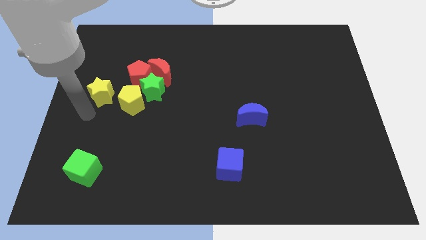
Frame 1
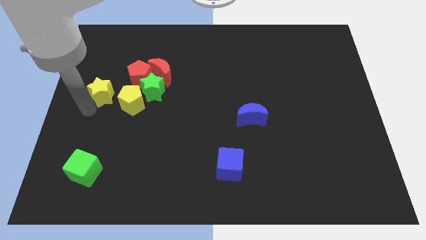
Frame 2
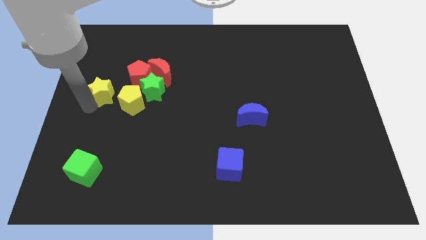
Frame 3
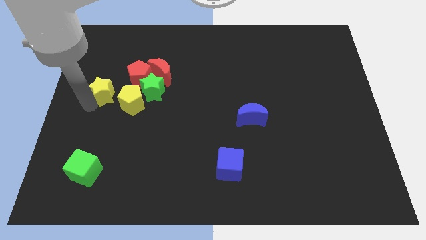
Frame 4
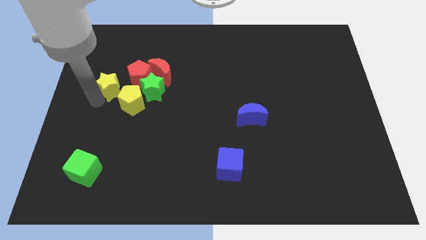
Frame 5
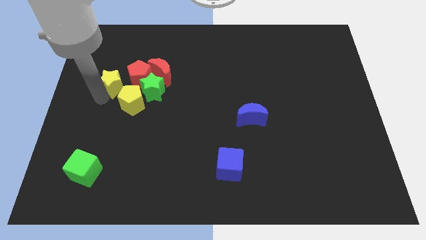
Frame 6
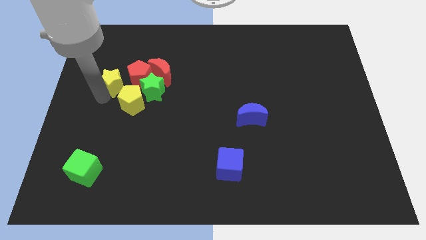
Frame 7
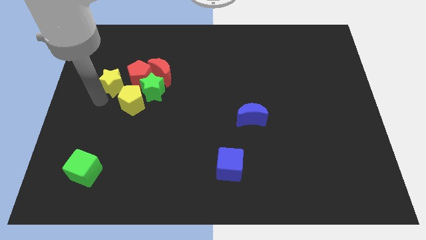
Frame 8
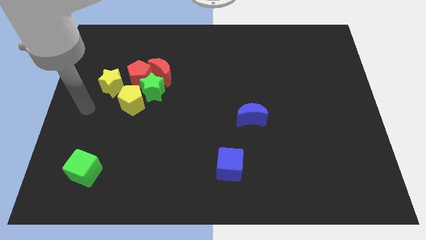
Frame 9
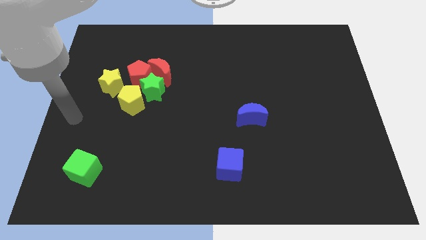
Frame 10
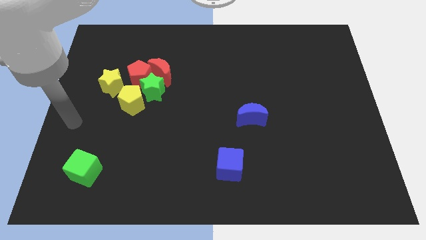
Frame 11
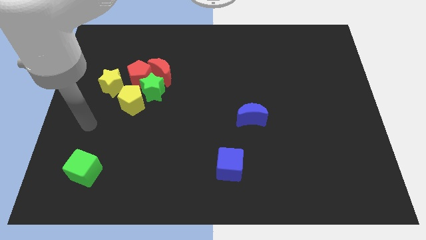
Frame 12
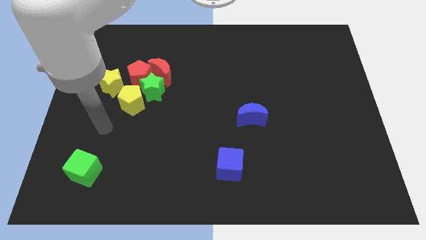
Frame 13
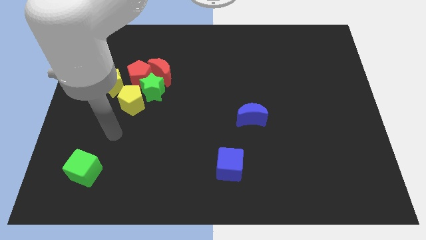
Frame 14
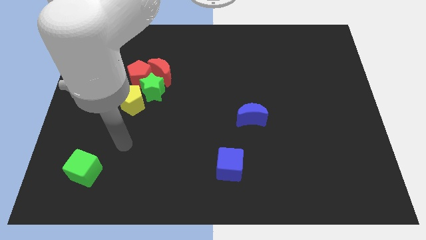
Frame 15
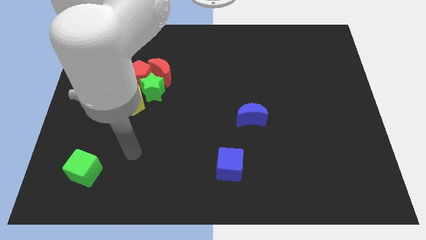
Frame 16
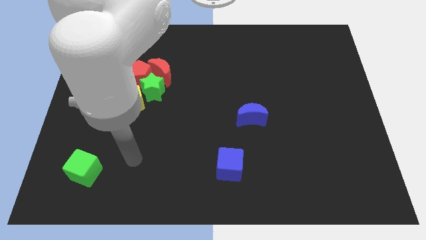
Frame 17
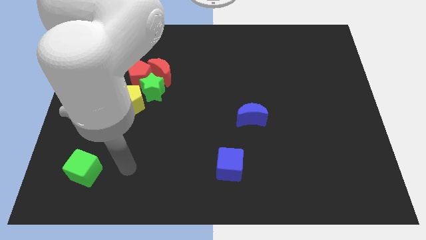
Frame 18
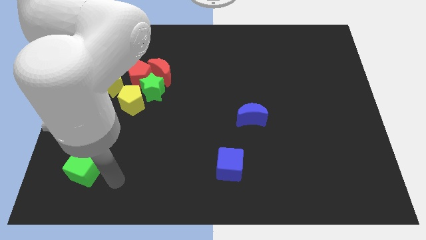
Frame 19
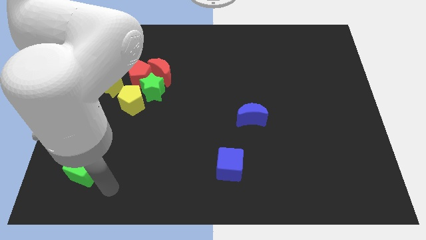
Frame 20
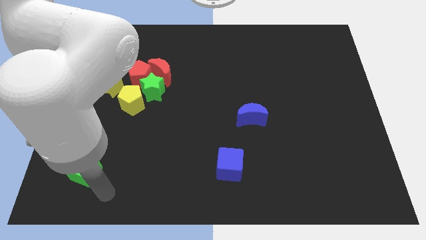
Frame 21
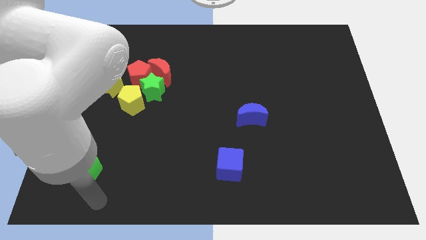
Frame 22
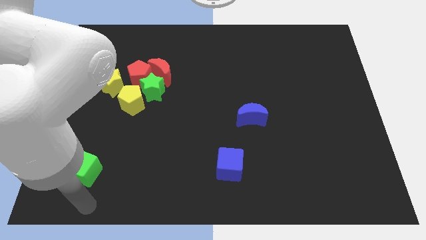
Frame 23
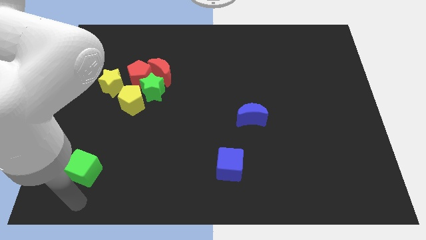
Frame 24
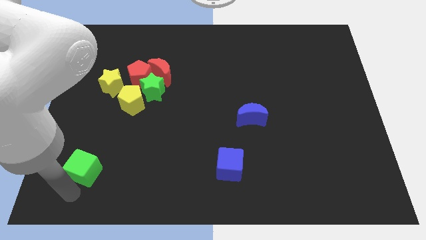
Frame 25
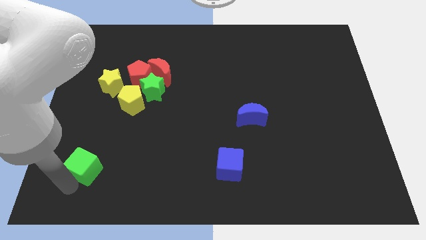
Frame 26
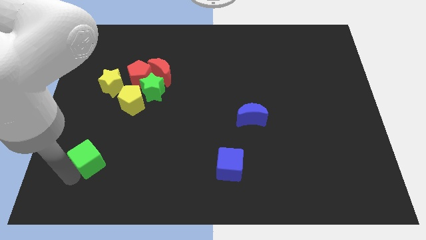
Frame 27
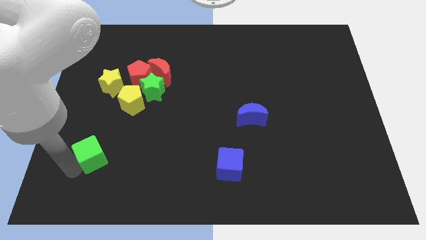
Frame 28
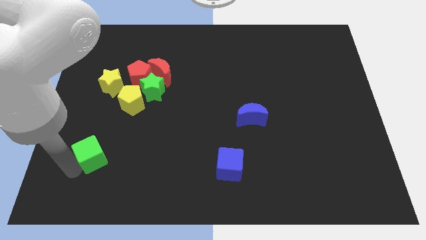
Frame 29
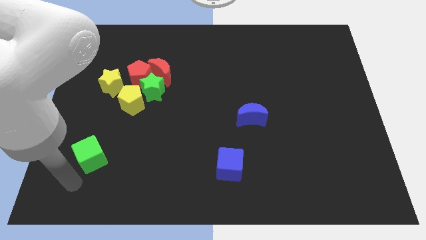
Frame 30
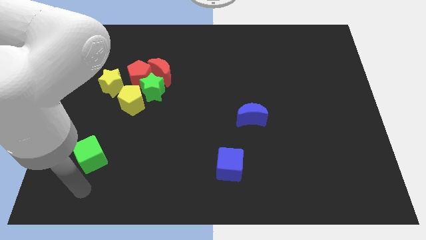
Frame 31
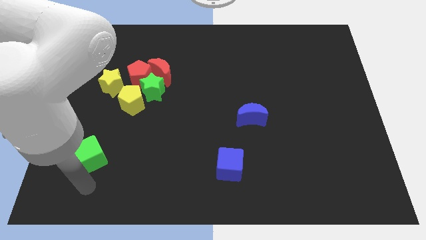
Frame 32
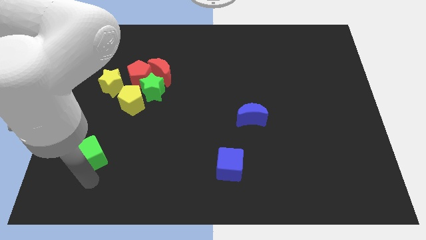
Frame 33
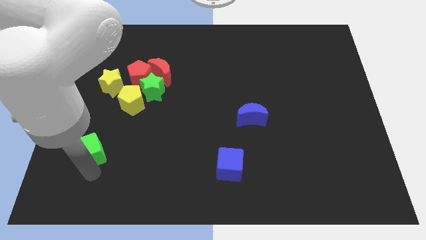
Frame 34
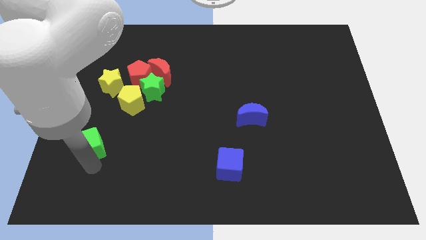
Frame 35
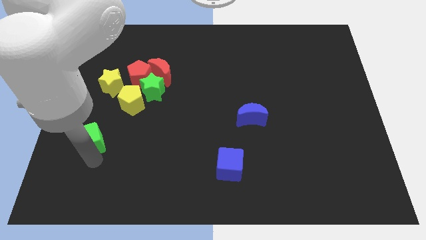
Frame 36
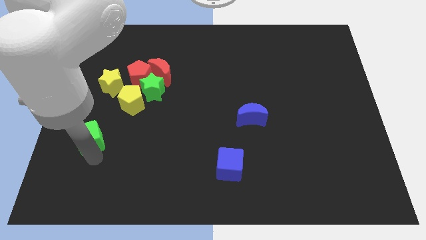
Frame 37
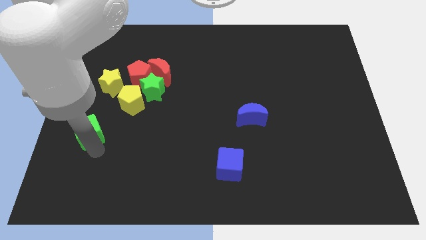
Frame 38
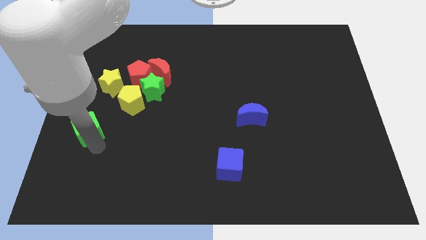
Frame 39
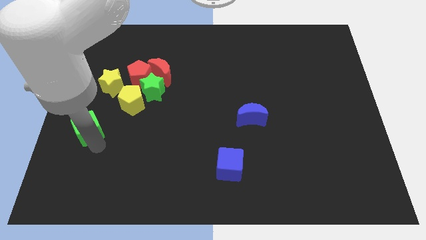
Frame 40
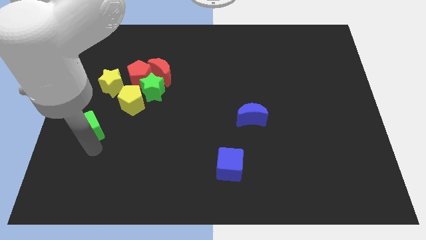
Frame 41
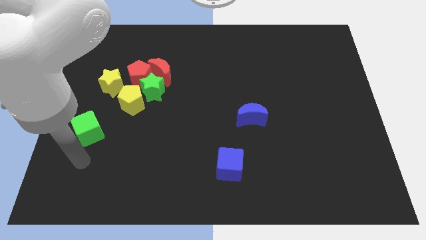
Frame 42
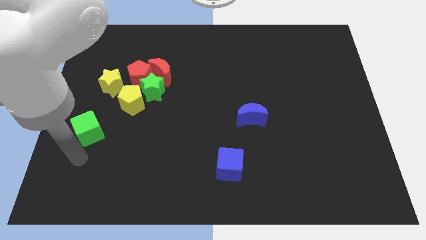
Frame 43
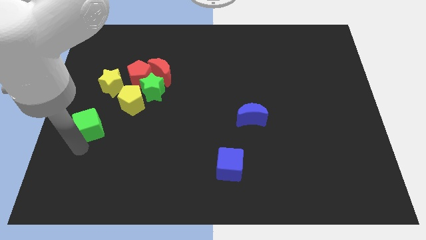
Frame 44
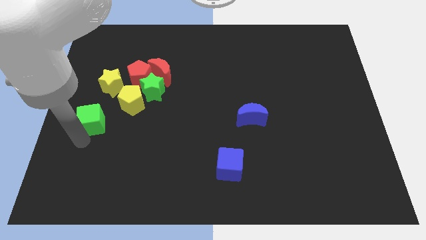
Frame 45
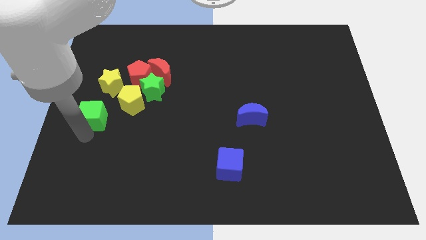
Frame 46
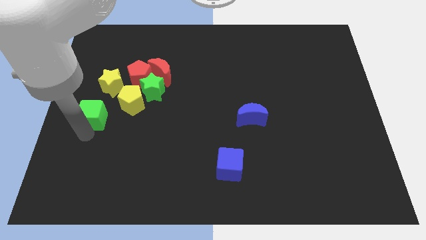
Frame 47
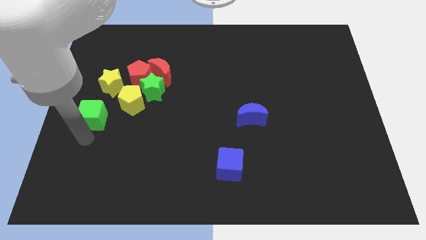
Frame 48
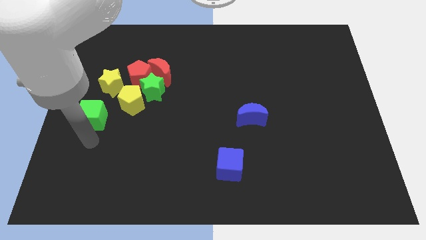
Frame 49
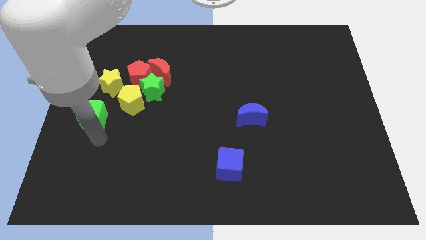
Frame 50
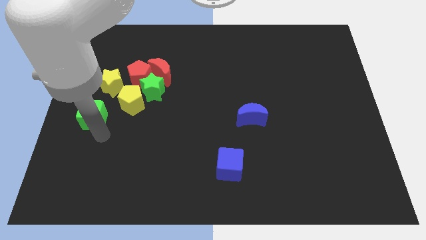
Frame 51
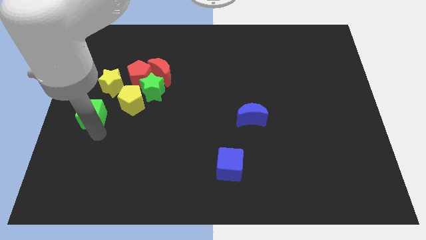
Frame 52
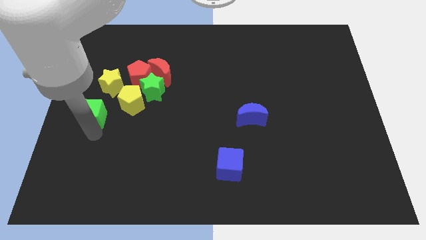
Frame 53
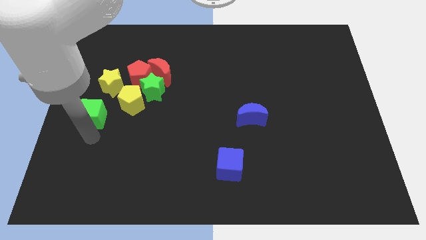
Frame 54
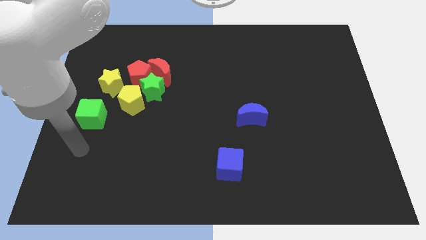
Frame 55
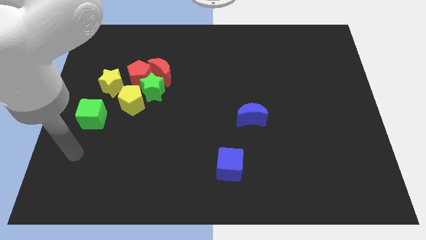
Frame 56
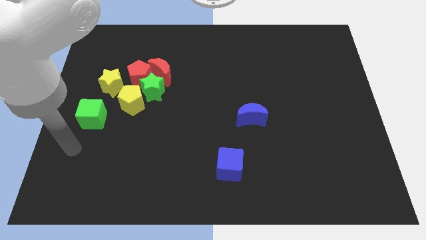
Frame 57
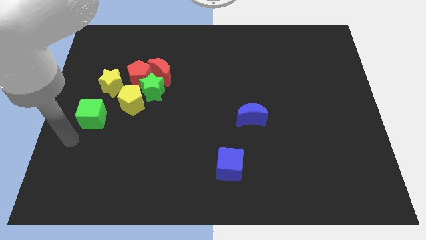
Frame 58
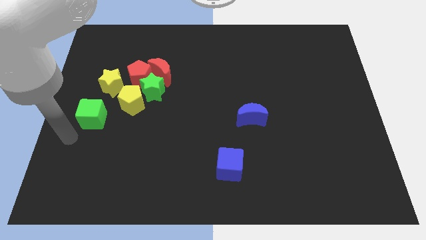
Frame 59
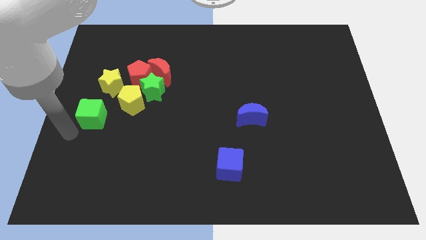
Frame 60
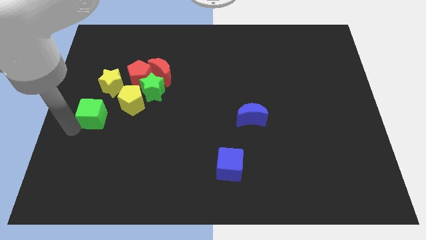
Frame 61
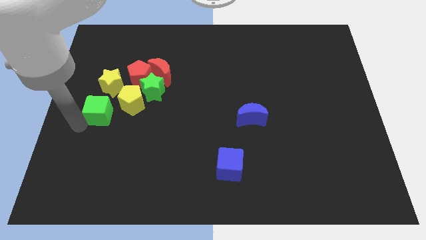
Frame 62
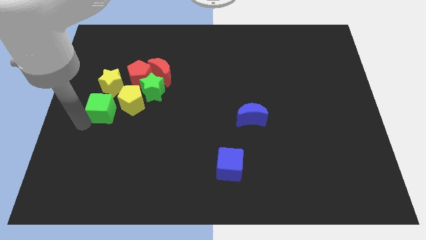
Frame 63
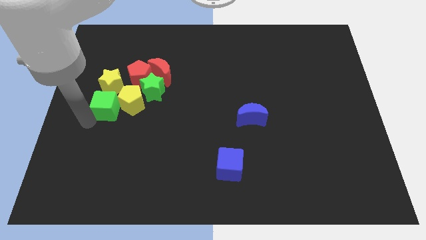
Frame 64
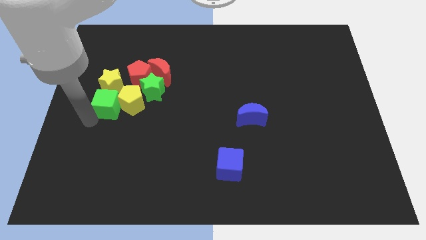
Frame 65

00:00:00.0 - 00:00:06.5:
push the green cube into the yellow star

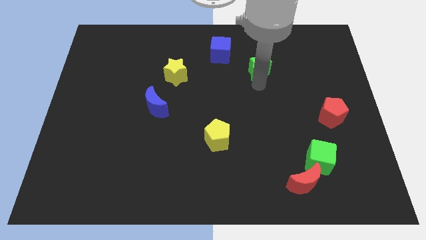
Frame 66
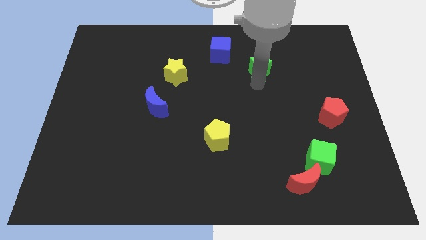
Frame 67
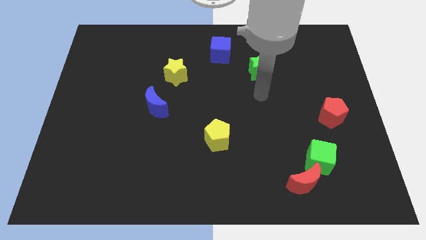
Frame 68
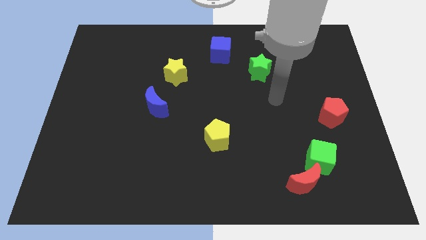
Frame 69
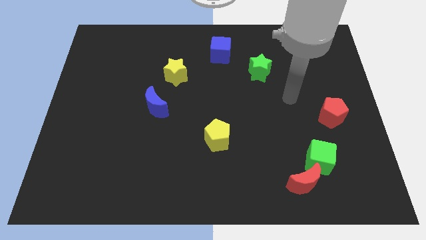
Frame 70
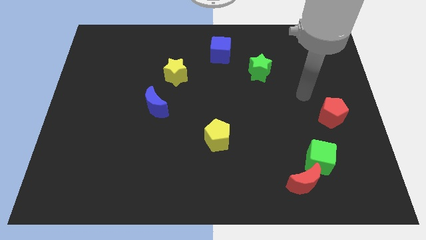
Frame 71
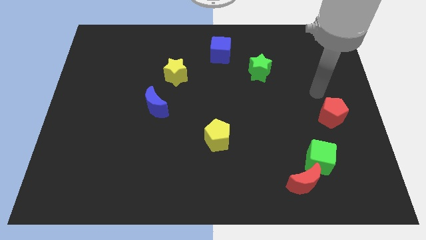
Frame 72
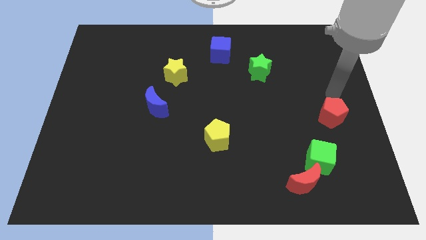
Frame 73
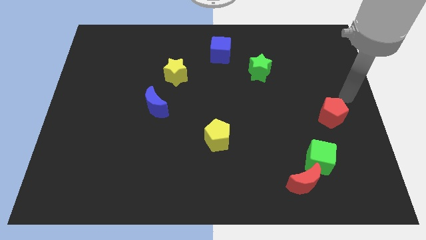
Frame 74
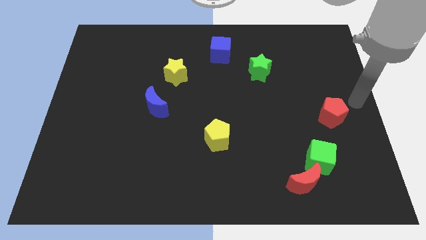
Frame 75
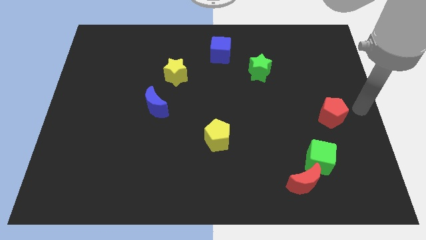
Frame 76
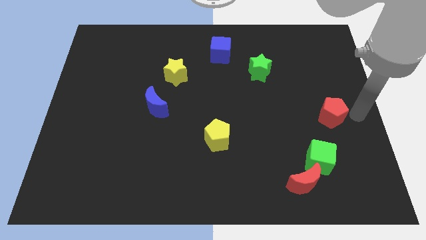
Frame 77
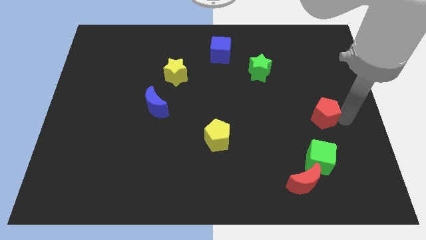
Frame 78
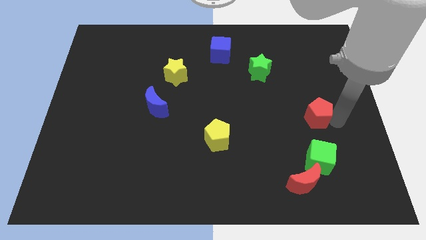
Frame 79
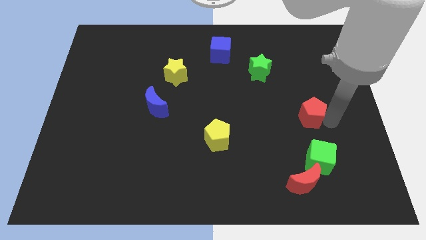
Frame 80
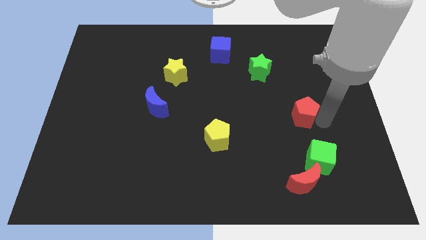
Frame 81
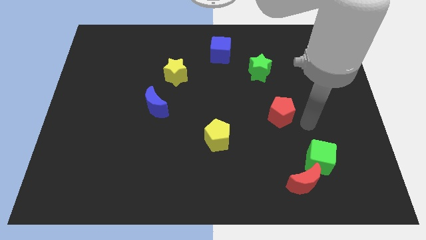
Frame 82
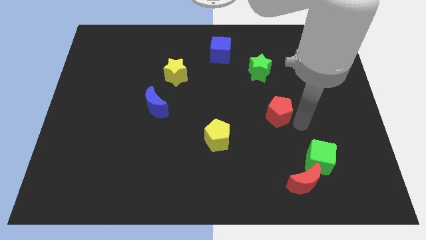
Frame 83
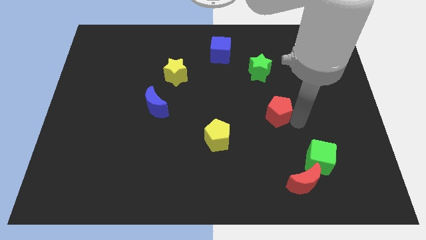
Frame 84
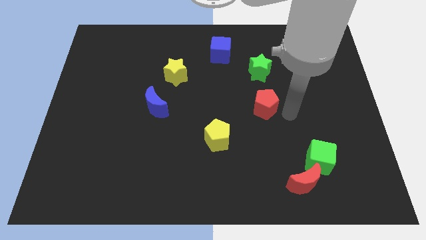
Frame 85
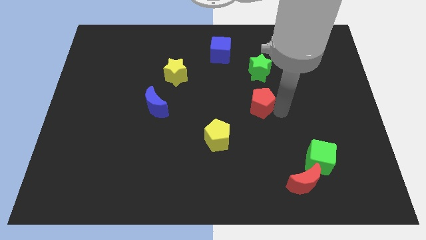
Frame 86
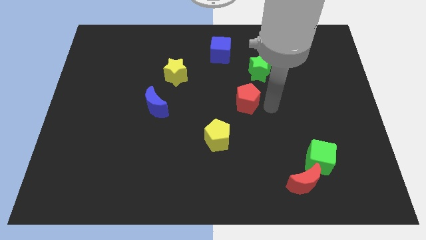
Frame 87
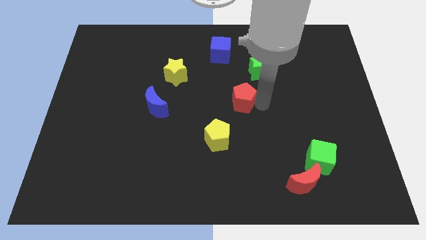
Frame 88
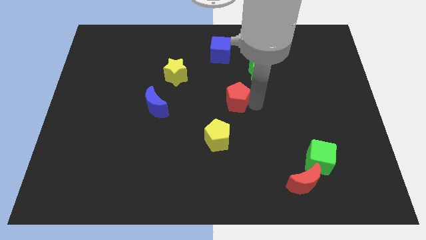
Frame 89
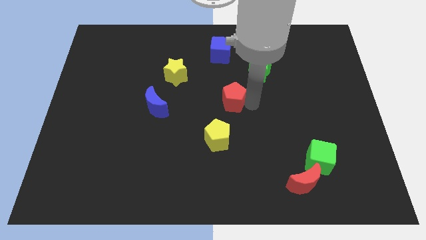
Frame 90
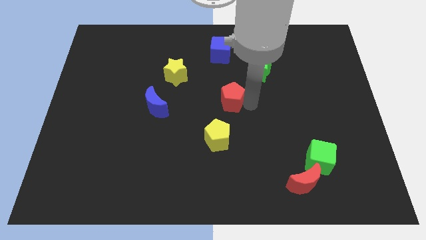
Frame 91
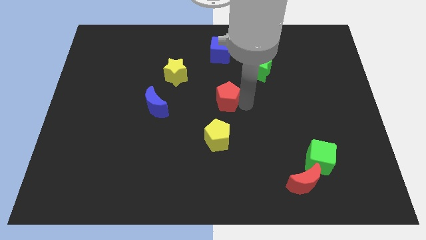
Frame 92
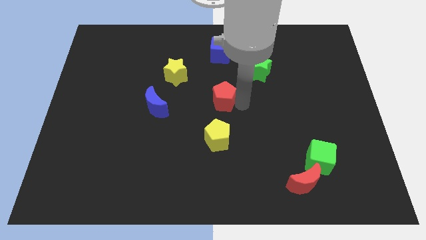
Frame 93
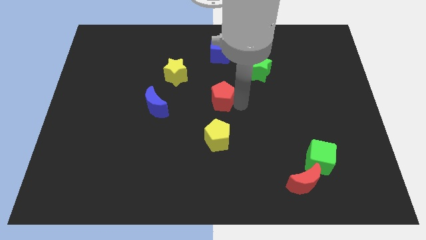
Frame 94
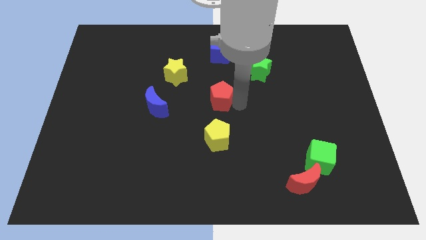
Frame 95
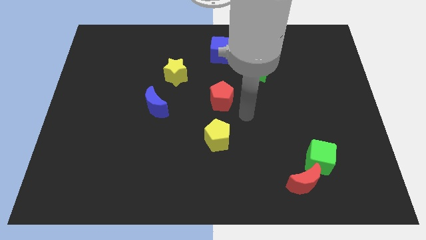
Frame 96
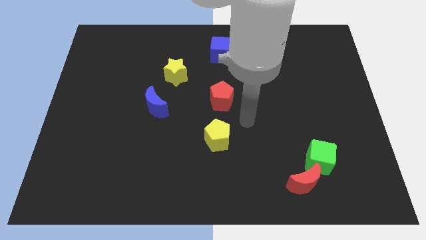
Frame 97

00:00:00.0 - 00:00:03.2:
place the red pentagon in between yellow pentagon and blue cube
